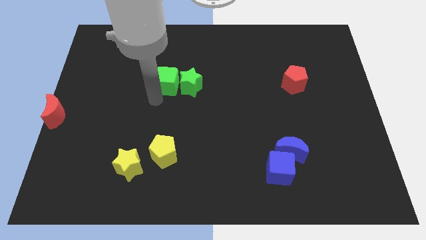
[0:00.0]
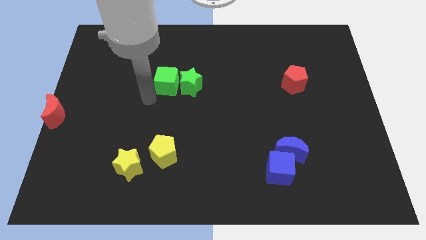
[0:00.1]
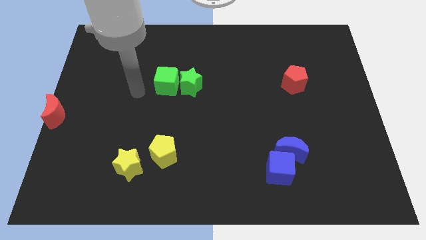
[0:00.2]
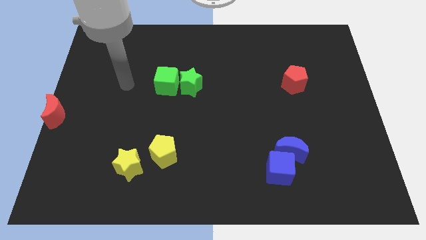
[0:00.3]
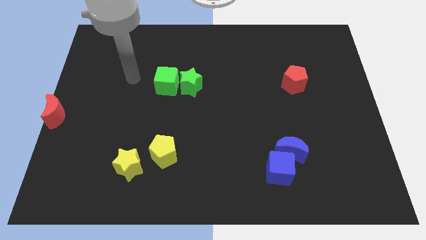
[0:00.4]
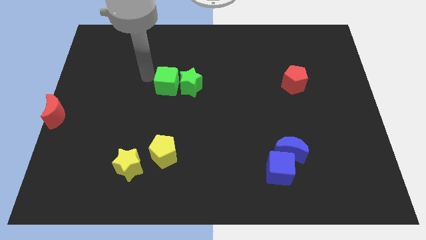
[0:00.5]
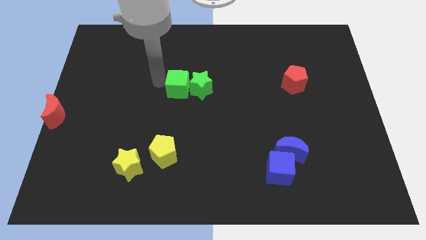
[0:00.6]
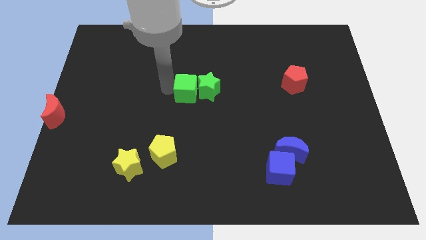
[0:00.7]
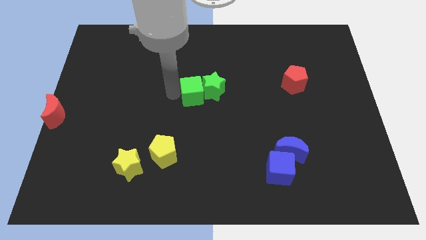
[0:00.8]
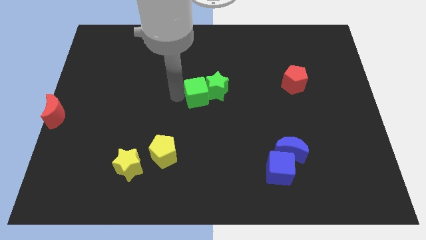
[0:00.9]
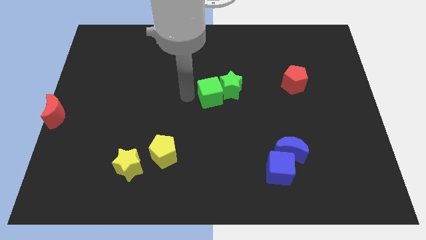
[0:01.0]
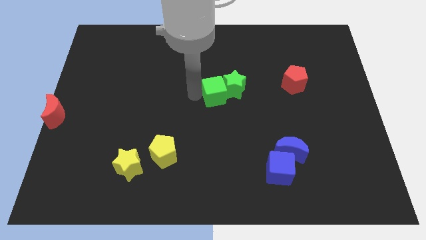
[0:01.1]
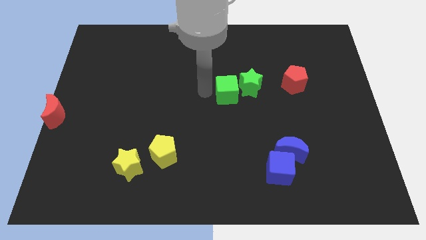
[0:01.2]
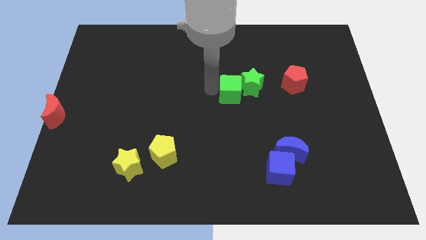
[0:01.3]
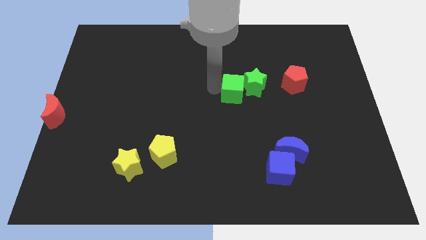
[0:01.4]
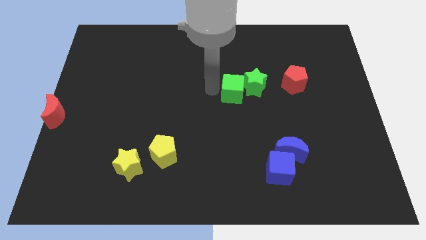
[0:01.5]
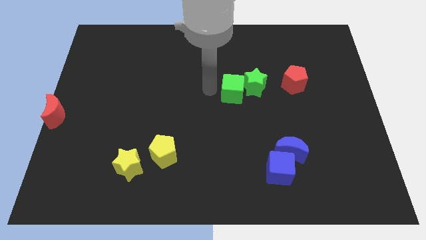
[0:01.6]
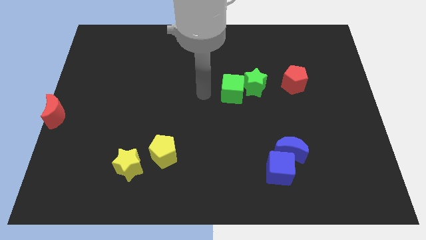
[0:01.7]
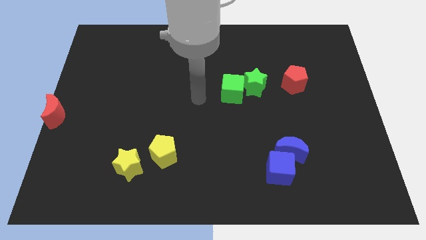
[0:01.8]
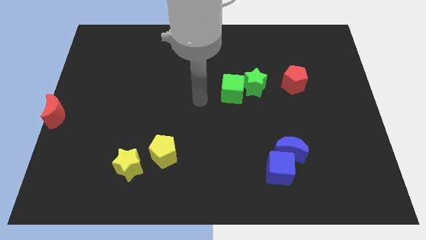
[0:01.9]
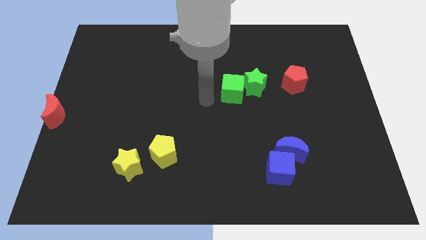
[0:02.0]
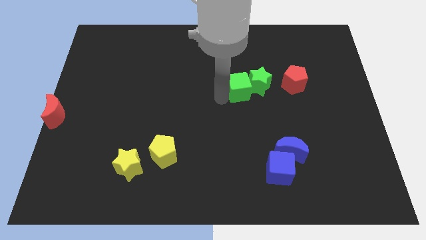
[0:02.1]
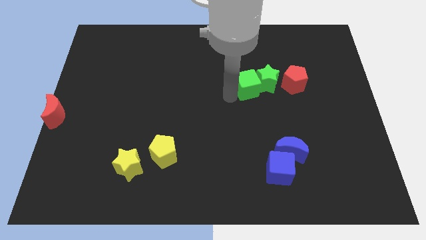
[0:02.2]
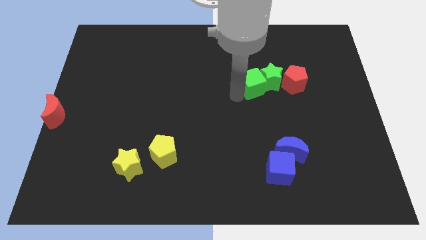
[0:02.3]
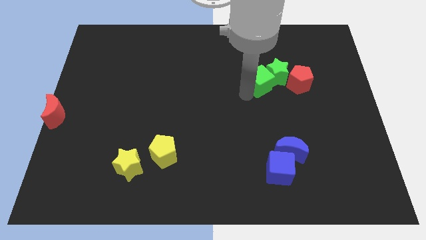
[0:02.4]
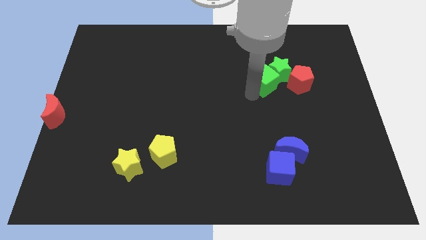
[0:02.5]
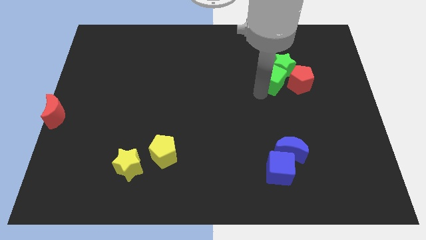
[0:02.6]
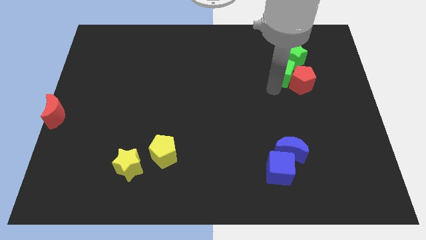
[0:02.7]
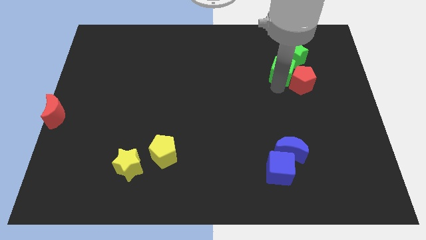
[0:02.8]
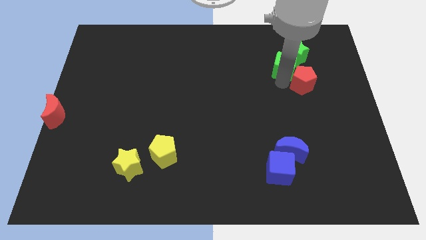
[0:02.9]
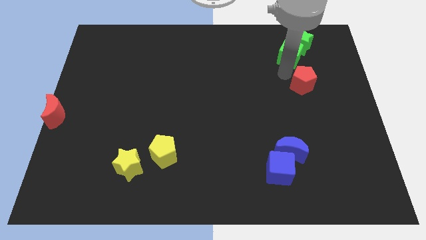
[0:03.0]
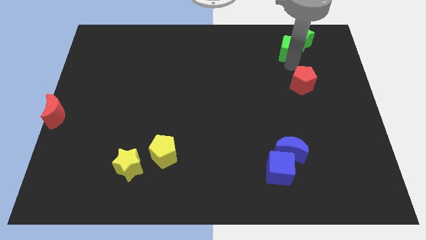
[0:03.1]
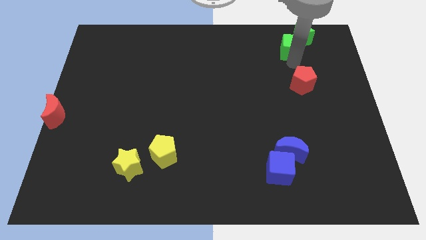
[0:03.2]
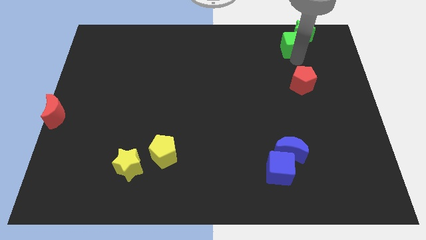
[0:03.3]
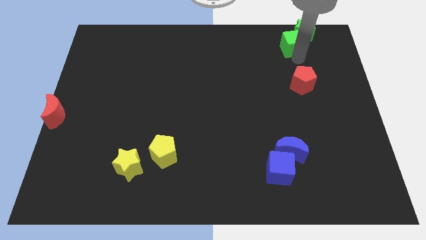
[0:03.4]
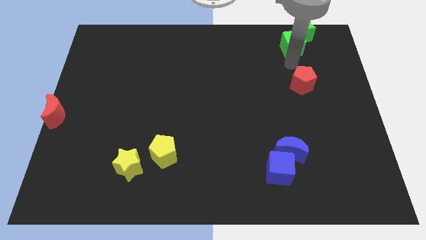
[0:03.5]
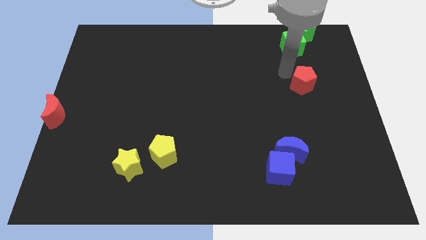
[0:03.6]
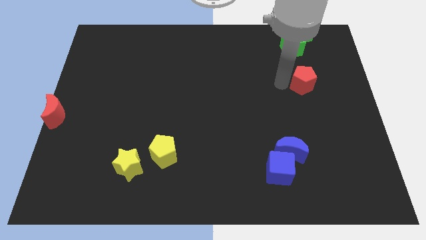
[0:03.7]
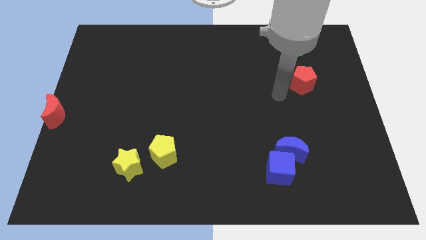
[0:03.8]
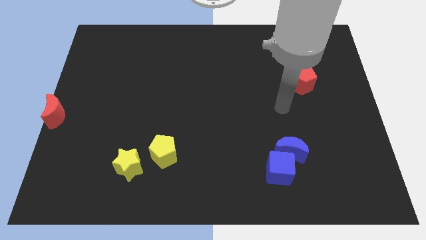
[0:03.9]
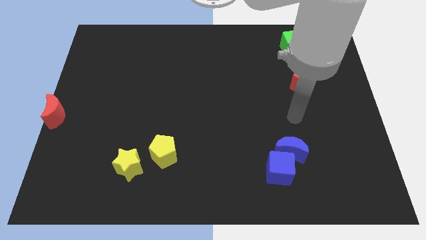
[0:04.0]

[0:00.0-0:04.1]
put the green blocks above the red pentagon

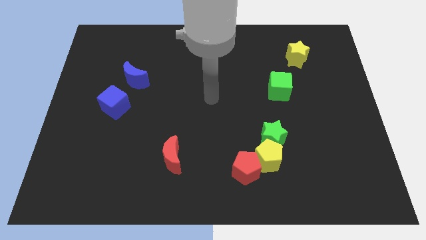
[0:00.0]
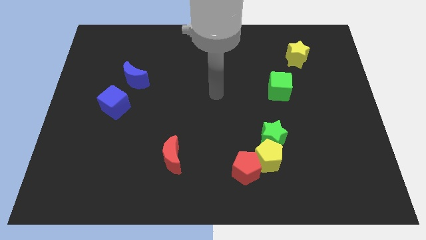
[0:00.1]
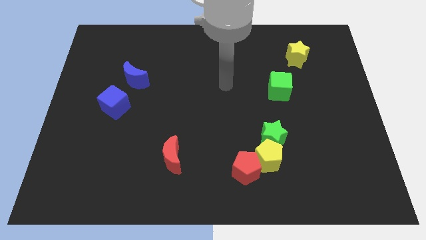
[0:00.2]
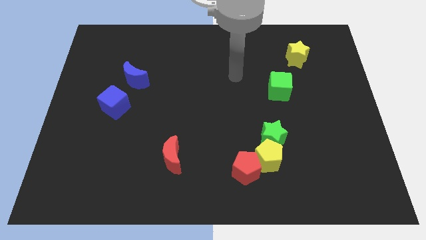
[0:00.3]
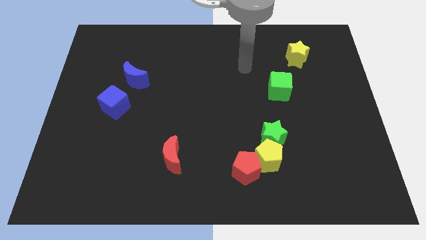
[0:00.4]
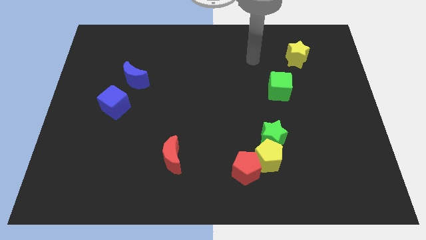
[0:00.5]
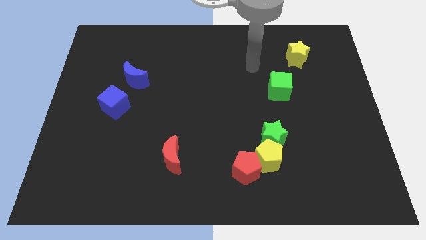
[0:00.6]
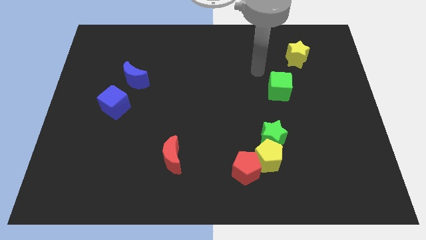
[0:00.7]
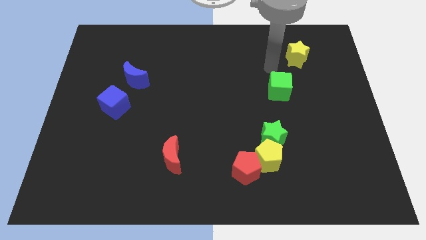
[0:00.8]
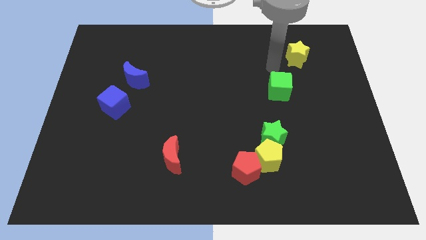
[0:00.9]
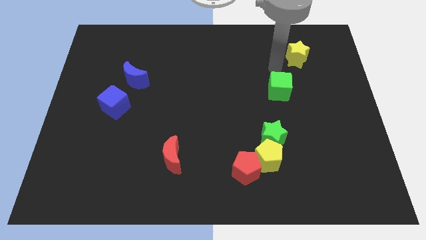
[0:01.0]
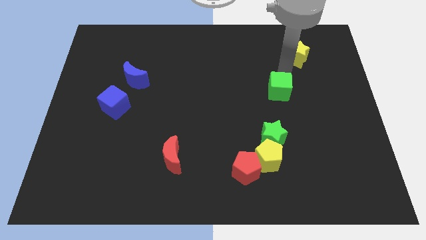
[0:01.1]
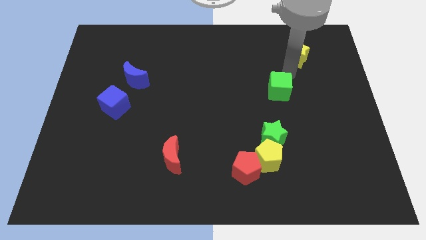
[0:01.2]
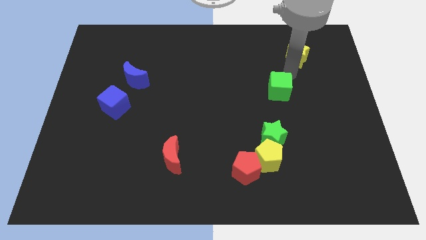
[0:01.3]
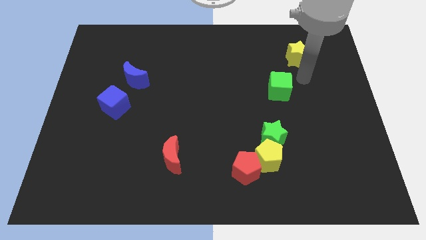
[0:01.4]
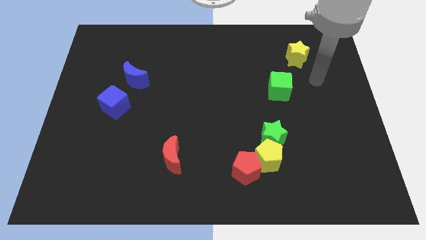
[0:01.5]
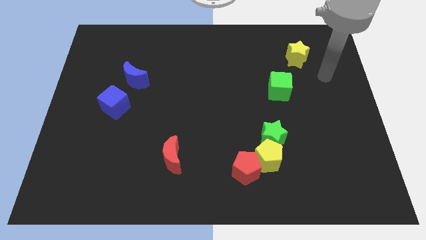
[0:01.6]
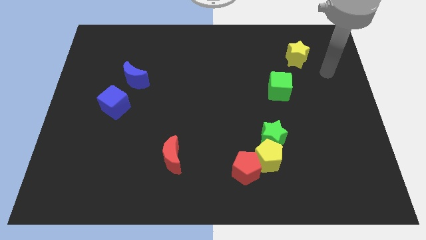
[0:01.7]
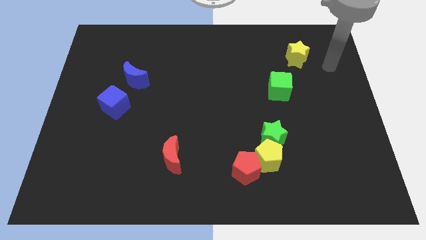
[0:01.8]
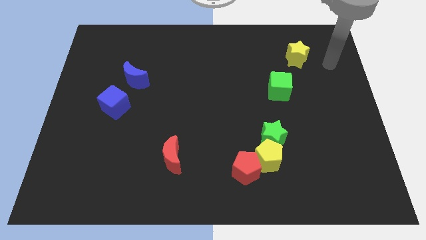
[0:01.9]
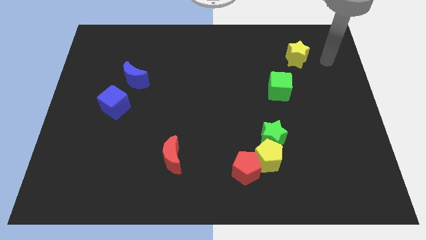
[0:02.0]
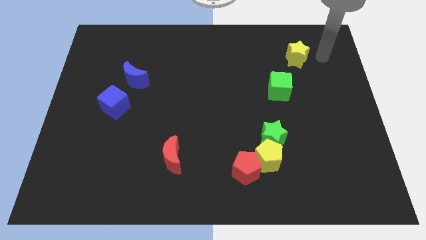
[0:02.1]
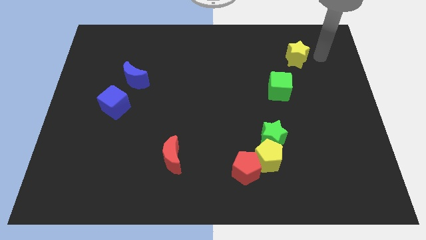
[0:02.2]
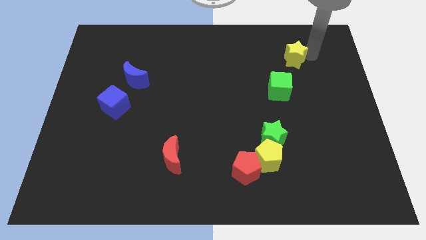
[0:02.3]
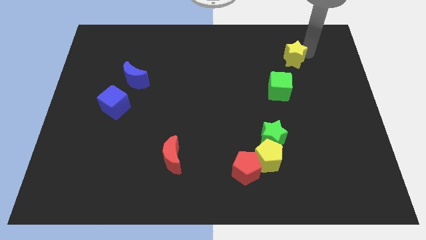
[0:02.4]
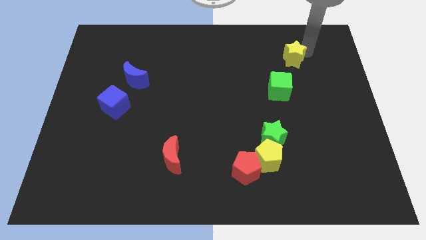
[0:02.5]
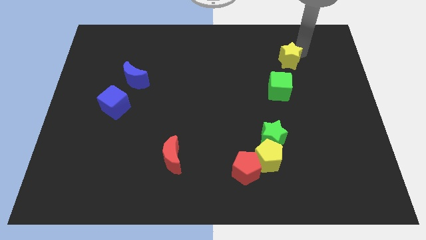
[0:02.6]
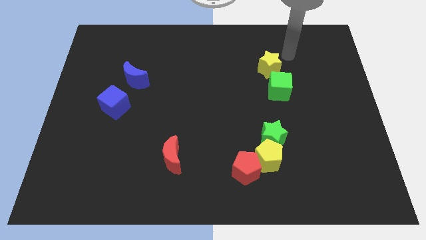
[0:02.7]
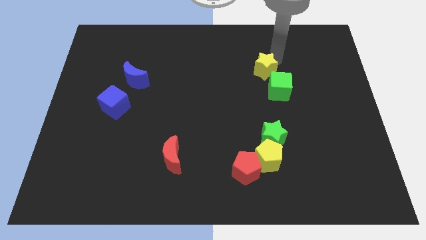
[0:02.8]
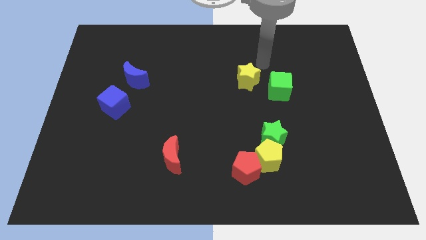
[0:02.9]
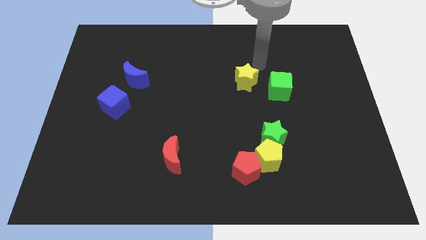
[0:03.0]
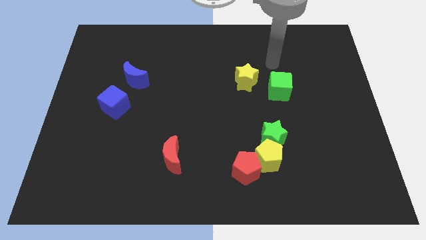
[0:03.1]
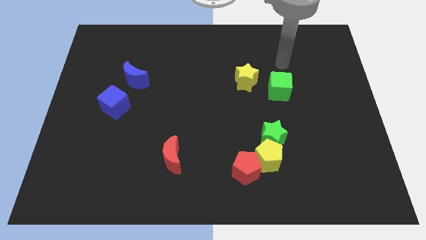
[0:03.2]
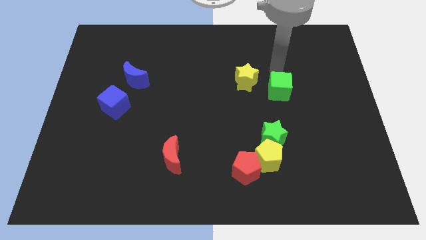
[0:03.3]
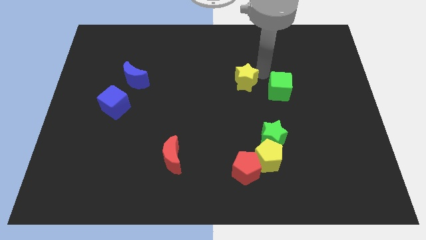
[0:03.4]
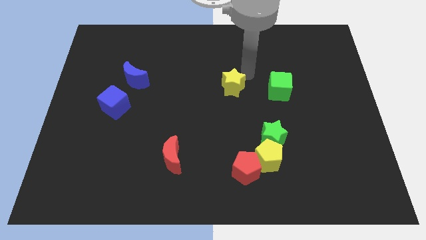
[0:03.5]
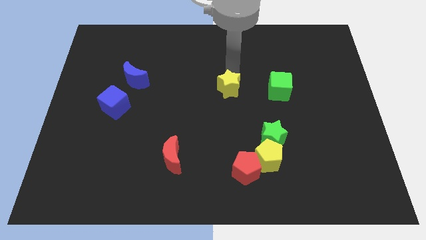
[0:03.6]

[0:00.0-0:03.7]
place yellow star to the left of green cube

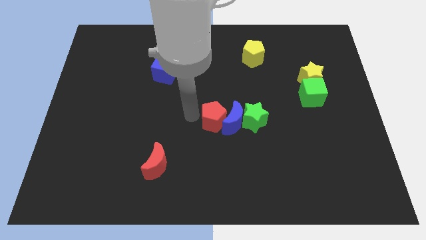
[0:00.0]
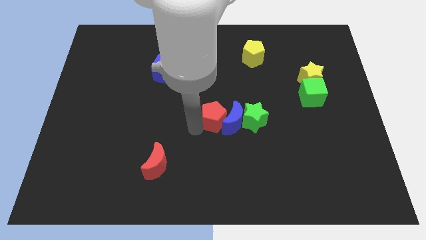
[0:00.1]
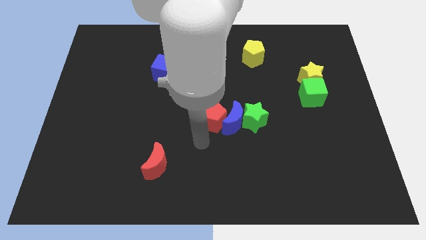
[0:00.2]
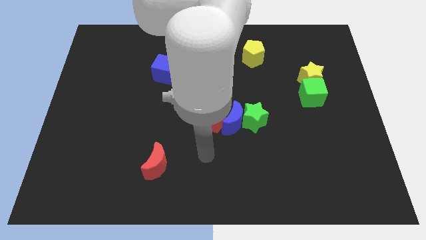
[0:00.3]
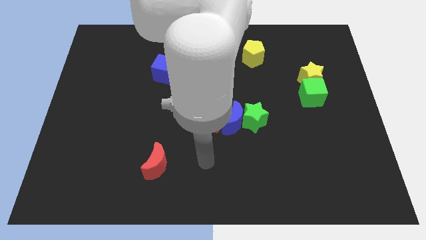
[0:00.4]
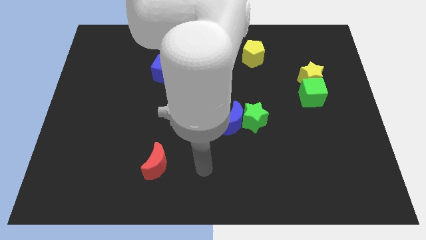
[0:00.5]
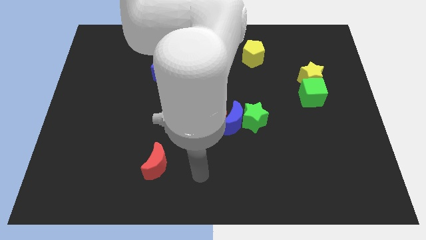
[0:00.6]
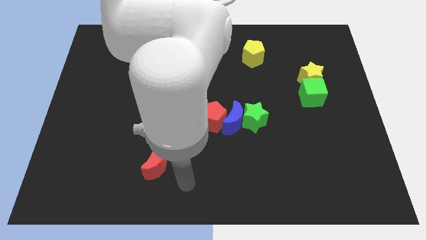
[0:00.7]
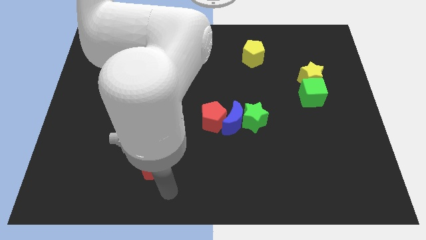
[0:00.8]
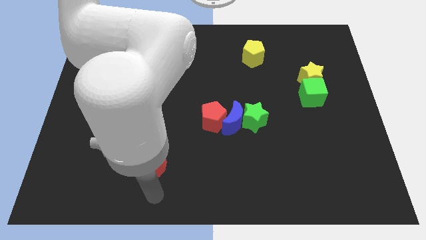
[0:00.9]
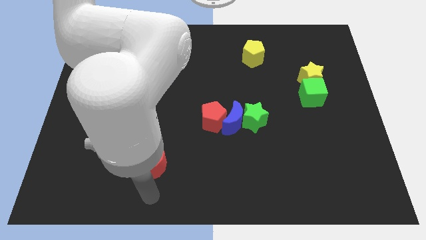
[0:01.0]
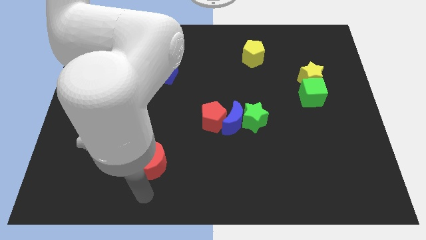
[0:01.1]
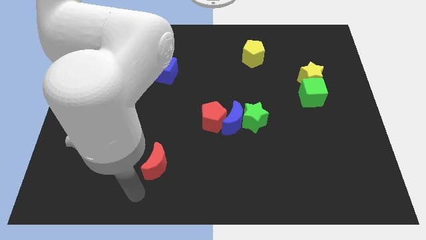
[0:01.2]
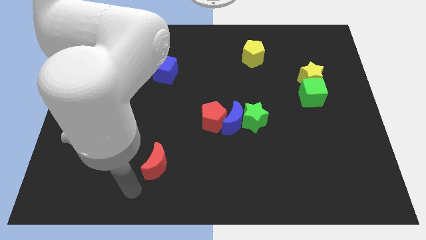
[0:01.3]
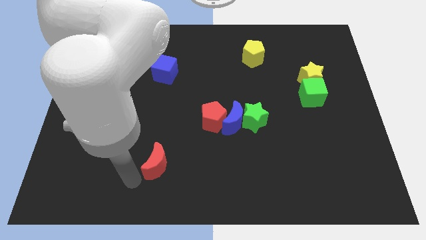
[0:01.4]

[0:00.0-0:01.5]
move the arm towards the red moon
